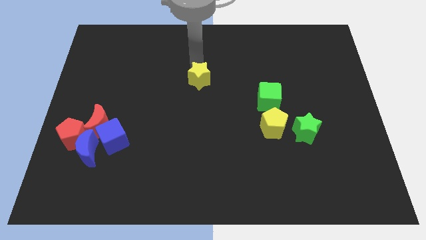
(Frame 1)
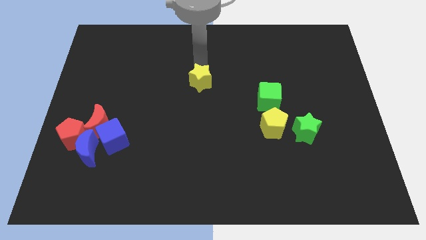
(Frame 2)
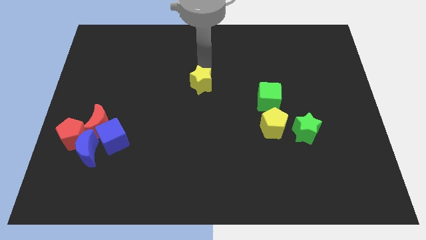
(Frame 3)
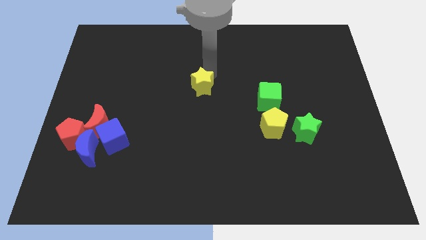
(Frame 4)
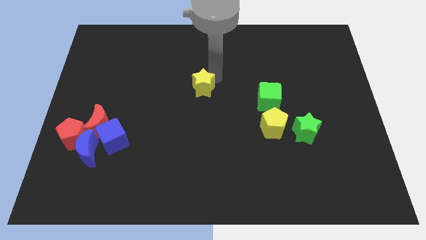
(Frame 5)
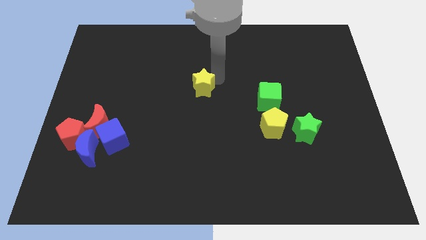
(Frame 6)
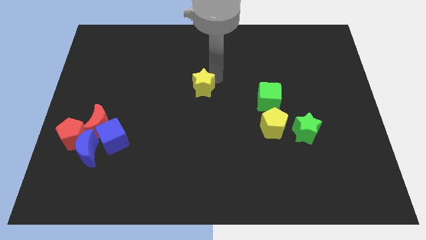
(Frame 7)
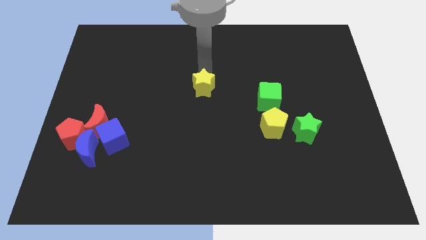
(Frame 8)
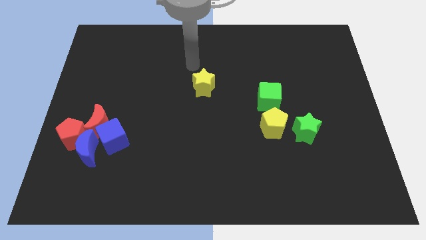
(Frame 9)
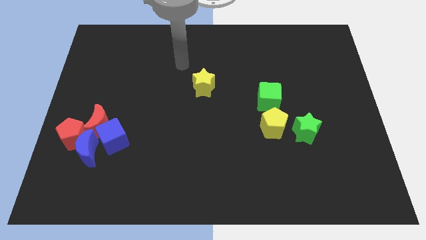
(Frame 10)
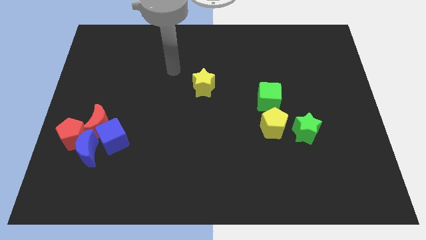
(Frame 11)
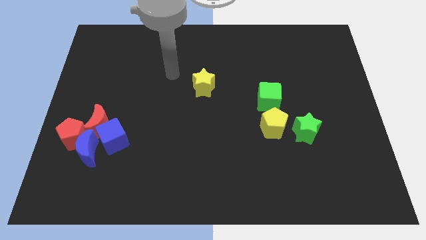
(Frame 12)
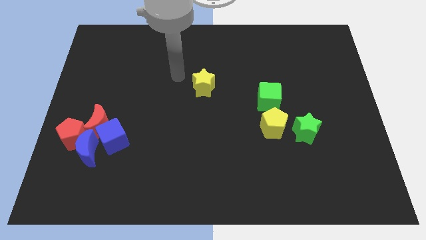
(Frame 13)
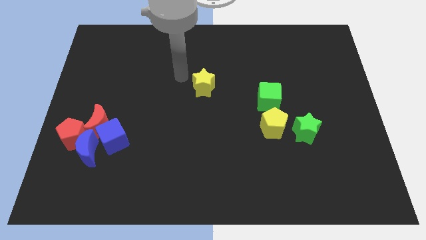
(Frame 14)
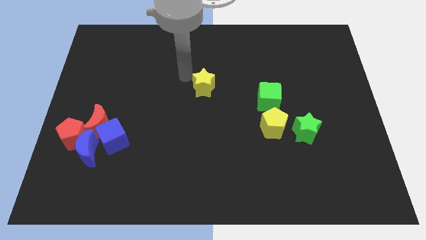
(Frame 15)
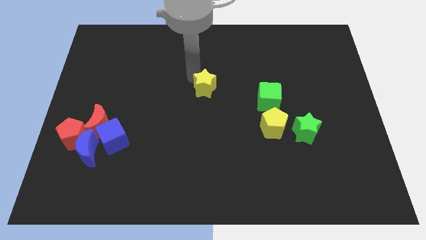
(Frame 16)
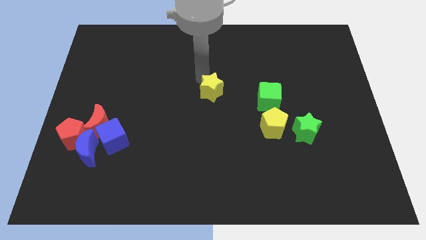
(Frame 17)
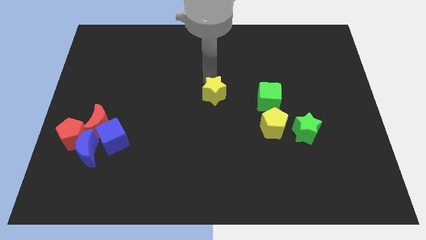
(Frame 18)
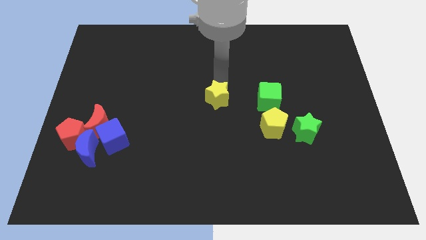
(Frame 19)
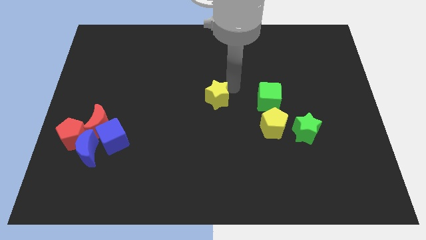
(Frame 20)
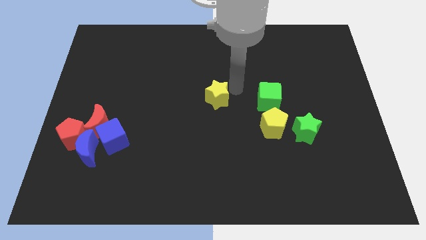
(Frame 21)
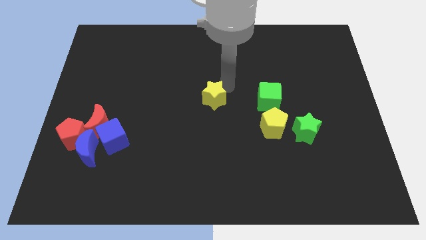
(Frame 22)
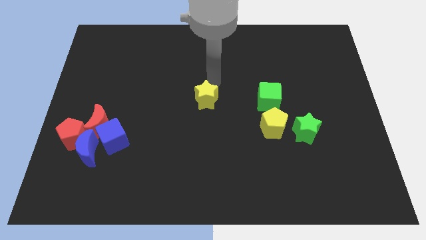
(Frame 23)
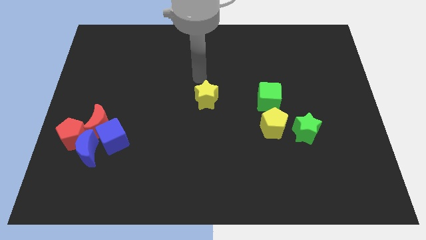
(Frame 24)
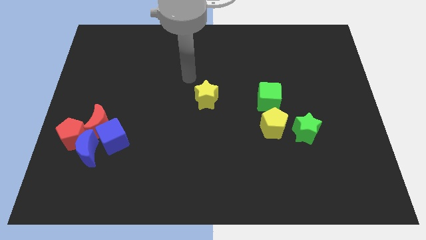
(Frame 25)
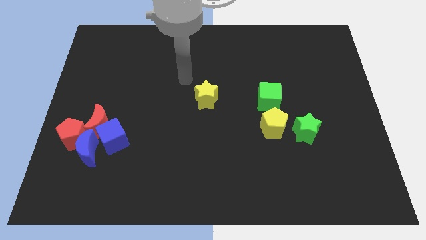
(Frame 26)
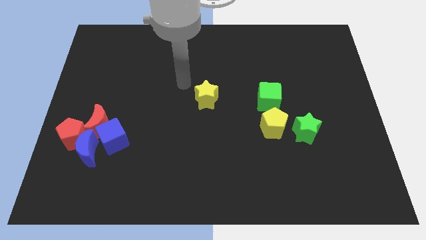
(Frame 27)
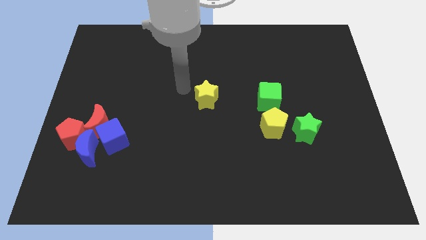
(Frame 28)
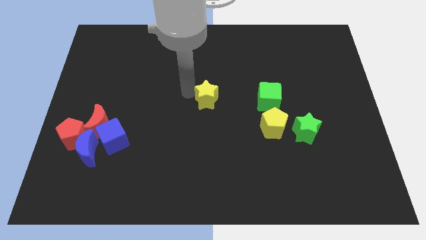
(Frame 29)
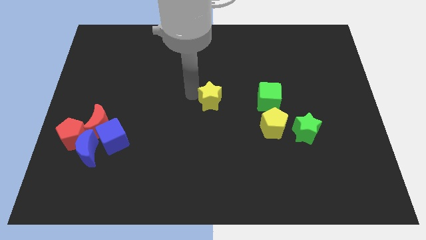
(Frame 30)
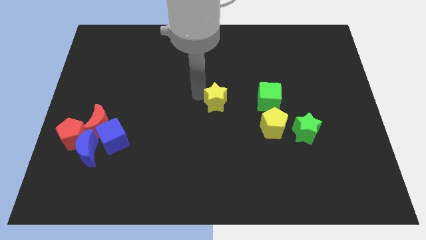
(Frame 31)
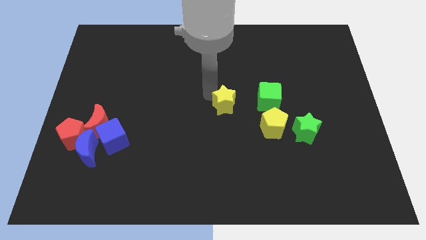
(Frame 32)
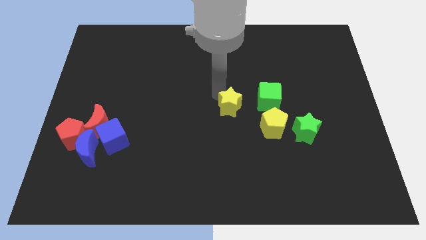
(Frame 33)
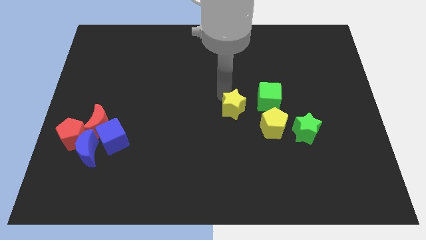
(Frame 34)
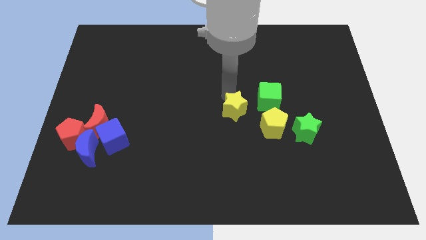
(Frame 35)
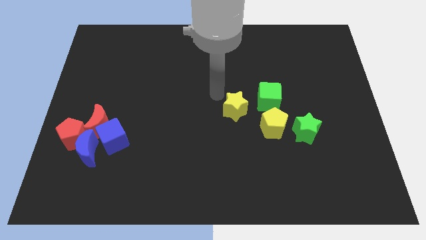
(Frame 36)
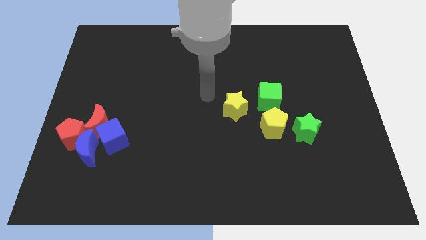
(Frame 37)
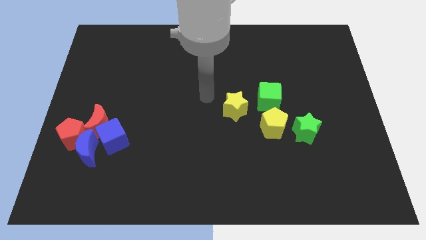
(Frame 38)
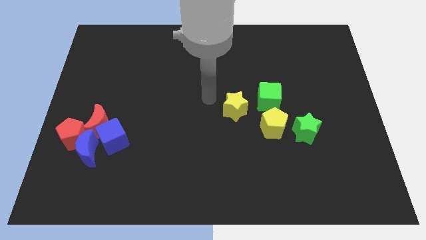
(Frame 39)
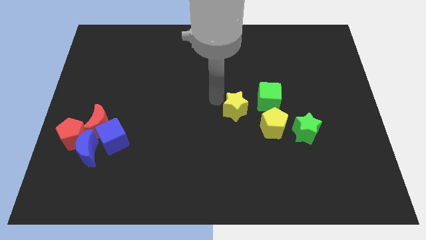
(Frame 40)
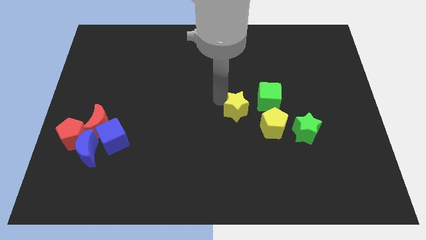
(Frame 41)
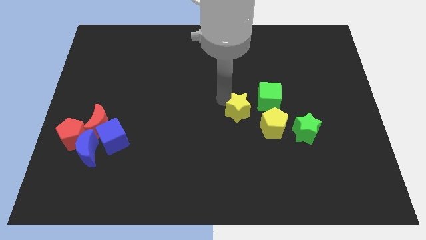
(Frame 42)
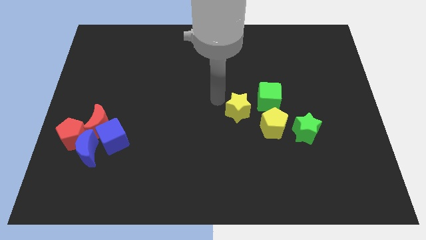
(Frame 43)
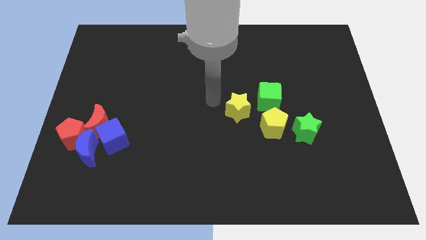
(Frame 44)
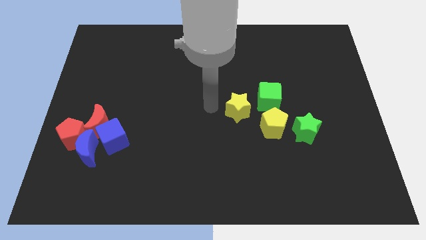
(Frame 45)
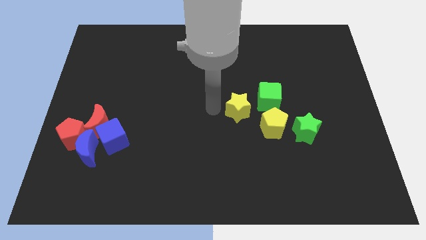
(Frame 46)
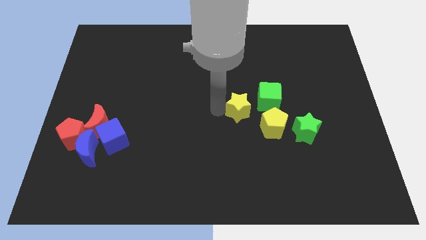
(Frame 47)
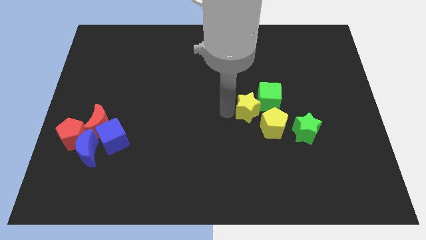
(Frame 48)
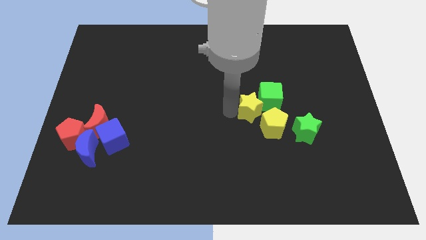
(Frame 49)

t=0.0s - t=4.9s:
push the yellow star into the green cube

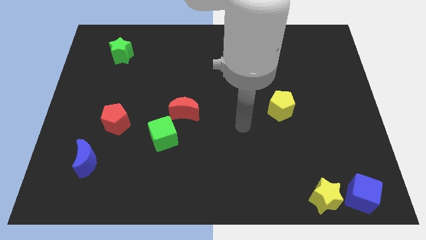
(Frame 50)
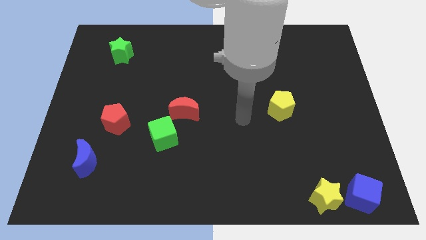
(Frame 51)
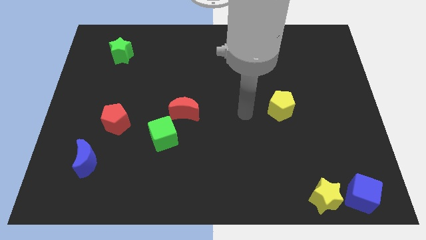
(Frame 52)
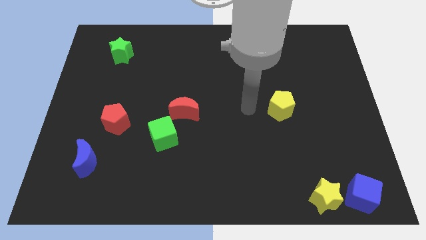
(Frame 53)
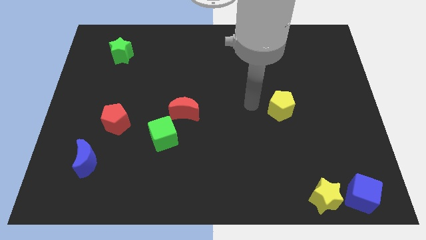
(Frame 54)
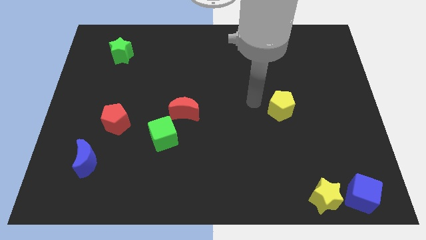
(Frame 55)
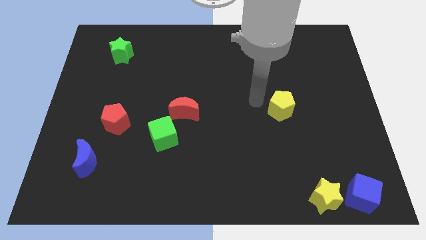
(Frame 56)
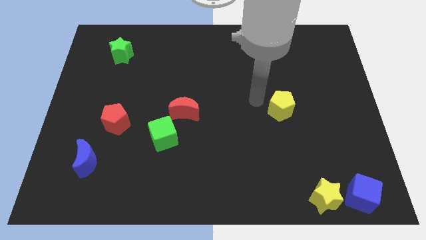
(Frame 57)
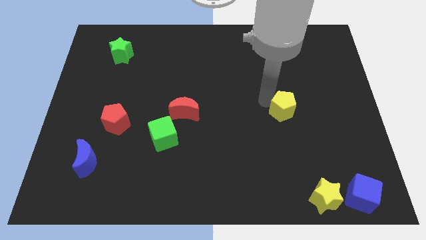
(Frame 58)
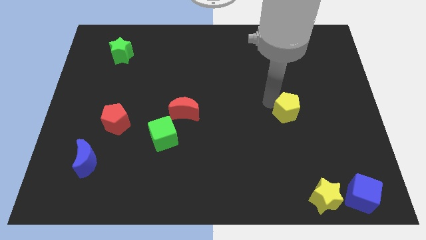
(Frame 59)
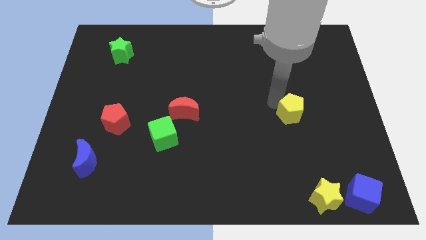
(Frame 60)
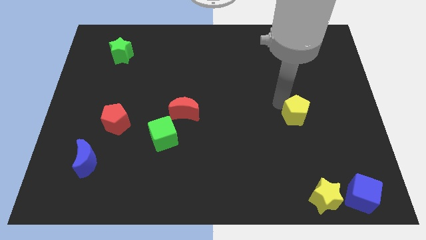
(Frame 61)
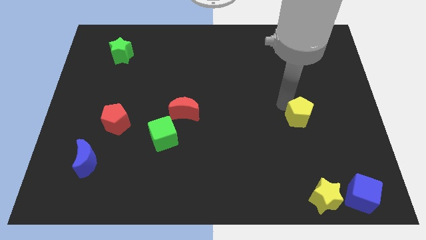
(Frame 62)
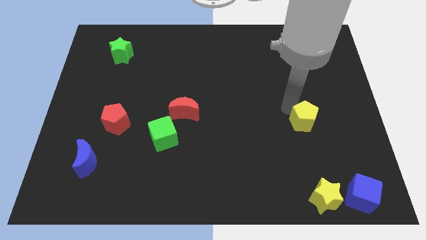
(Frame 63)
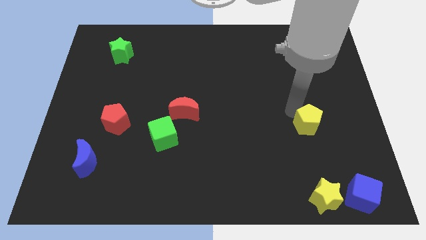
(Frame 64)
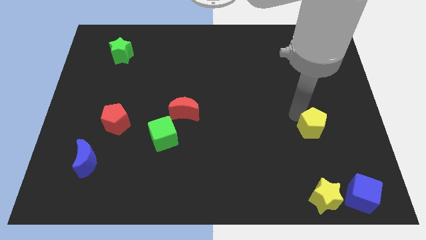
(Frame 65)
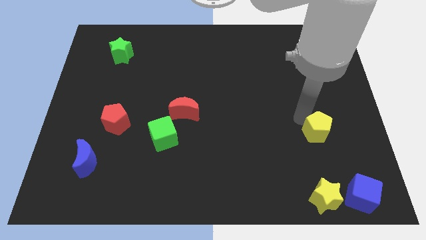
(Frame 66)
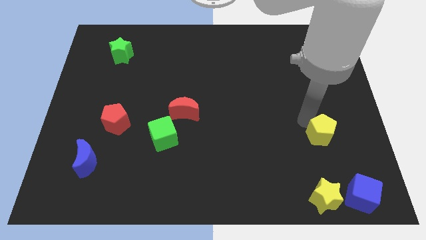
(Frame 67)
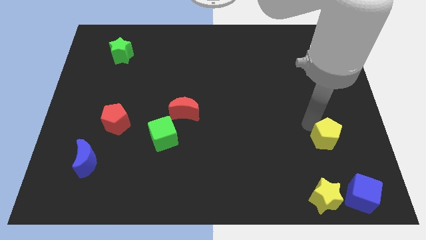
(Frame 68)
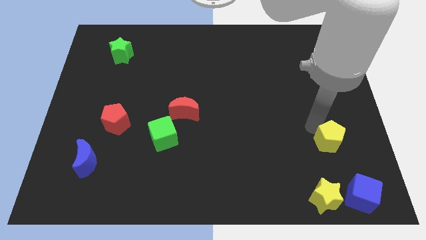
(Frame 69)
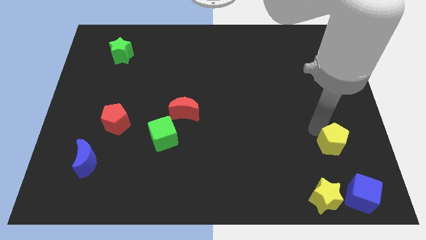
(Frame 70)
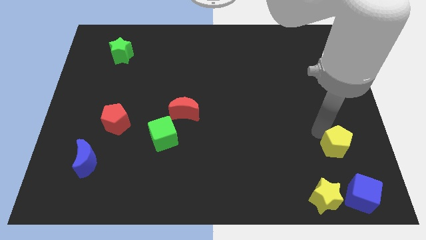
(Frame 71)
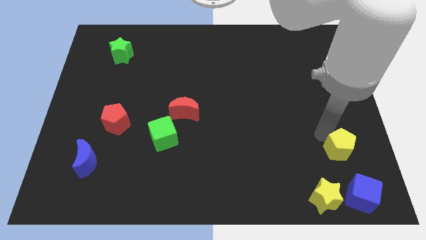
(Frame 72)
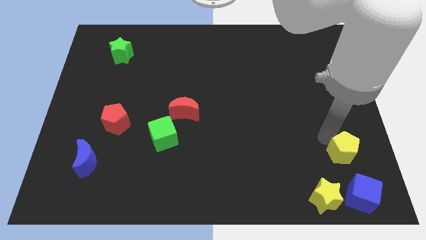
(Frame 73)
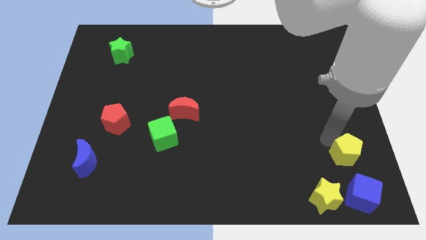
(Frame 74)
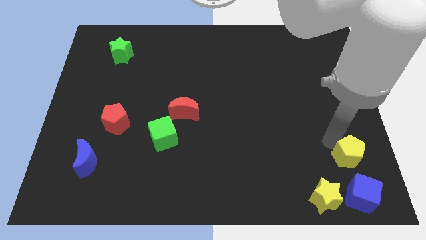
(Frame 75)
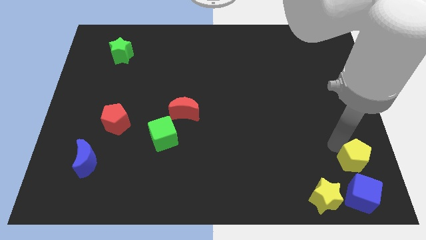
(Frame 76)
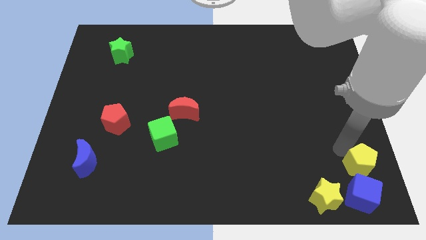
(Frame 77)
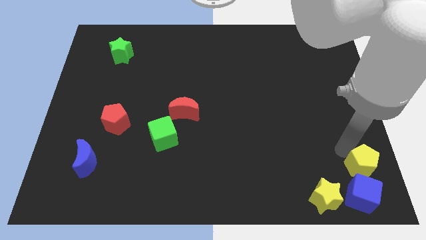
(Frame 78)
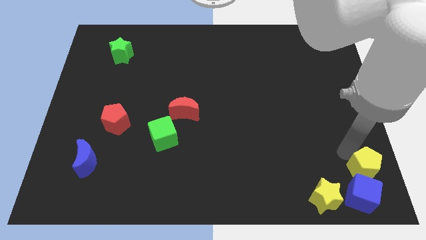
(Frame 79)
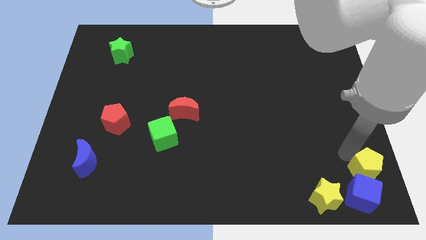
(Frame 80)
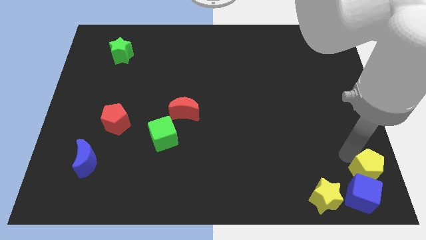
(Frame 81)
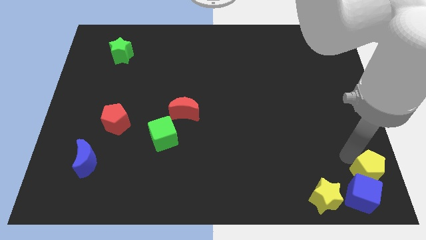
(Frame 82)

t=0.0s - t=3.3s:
put the yellow pentagon at the top side of the blue cube

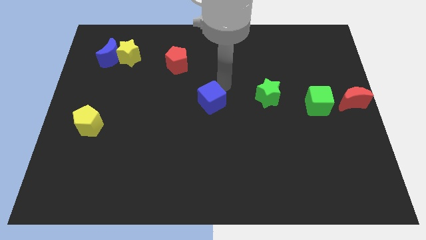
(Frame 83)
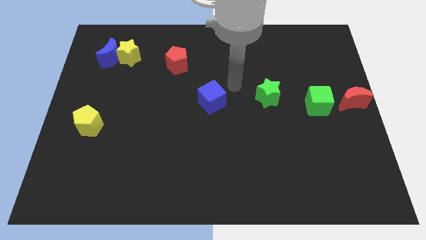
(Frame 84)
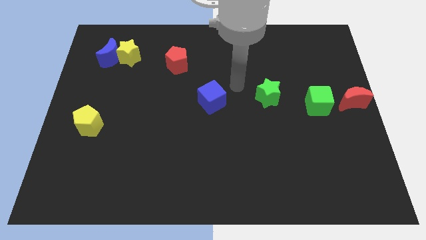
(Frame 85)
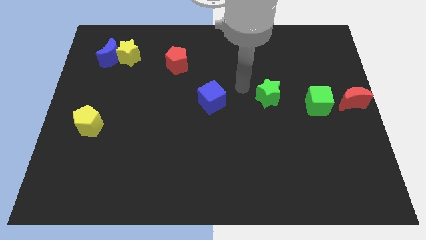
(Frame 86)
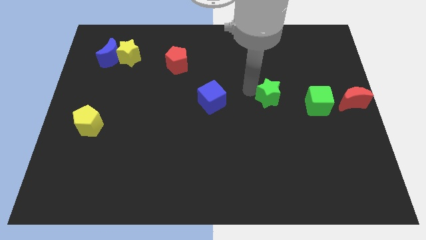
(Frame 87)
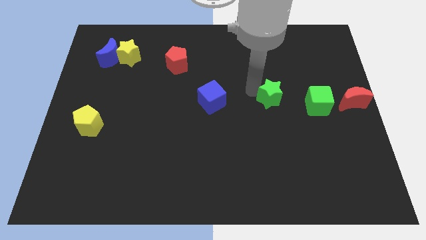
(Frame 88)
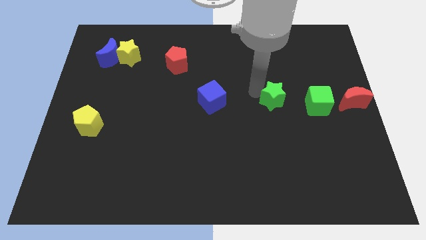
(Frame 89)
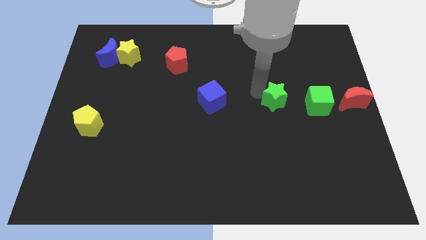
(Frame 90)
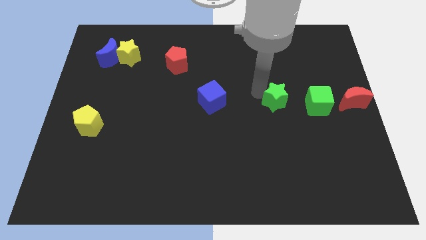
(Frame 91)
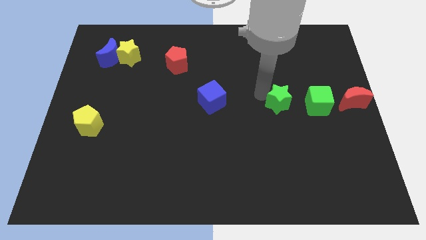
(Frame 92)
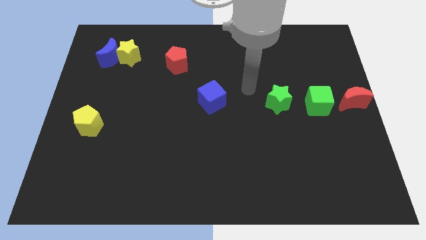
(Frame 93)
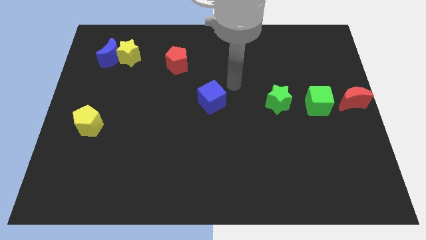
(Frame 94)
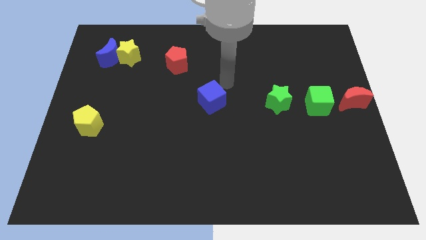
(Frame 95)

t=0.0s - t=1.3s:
push the green star right a bit
